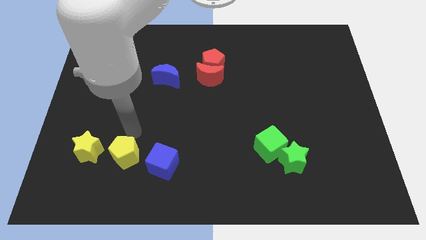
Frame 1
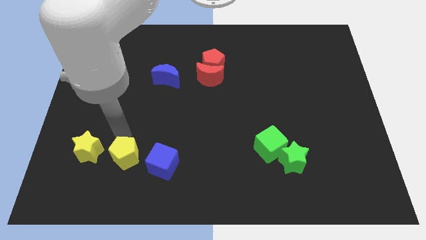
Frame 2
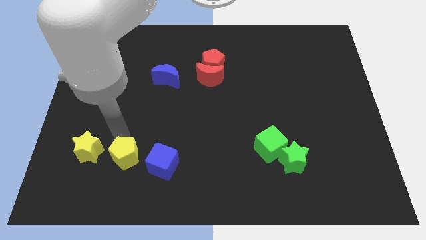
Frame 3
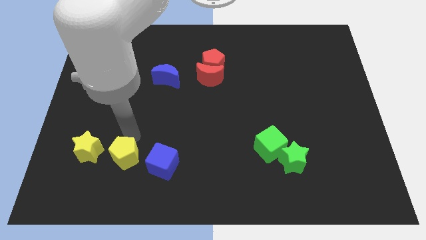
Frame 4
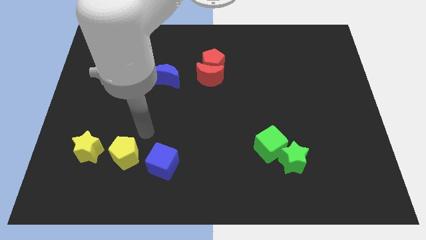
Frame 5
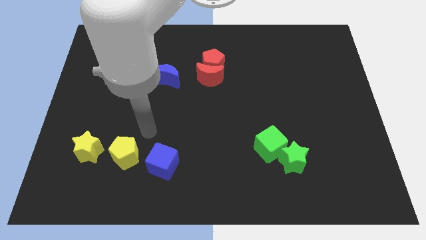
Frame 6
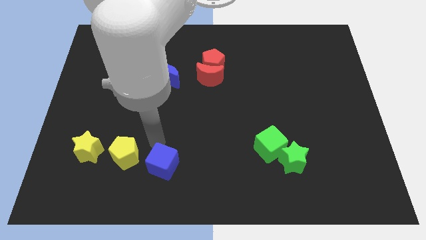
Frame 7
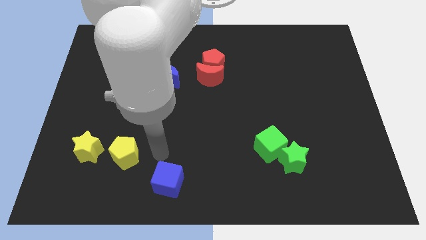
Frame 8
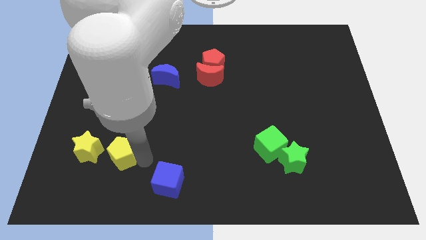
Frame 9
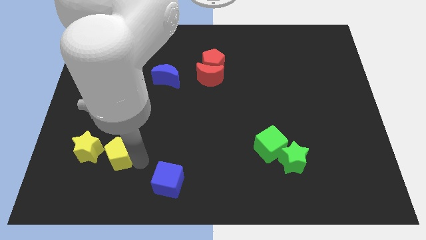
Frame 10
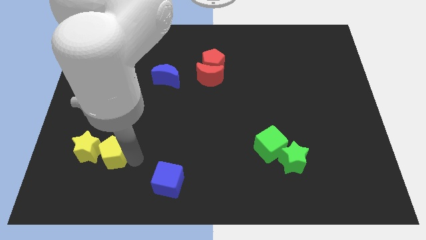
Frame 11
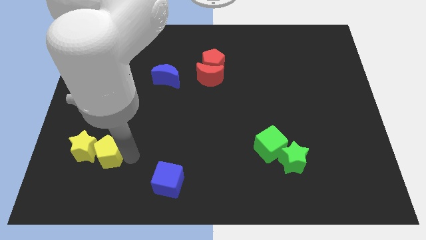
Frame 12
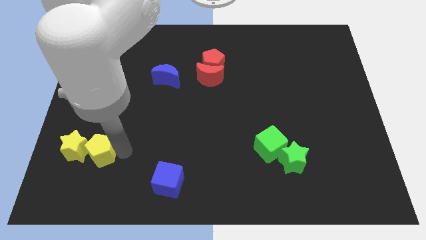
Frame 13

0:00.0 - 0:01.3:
move the yellow pentagon into the yellow star

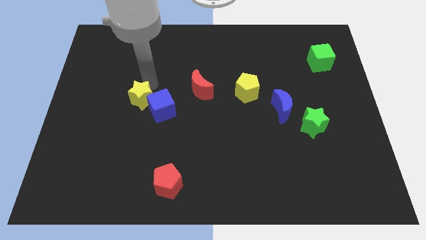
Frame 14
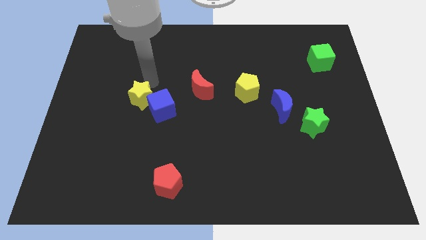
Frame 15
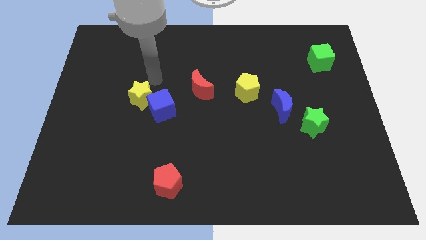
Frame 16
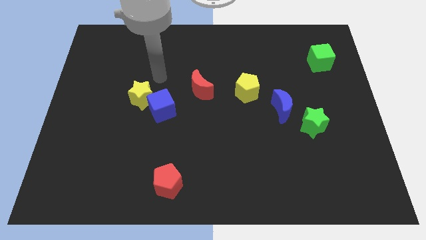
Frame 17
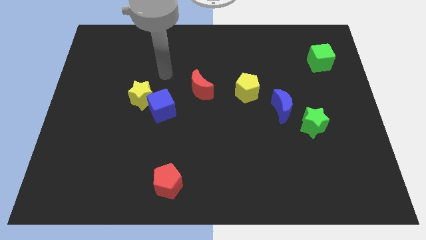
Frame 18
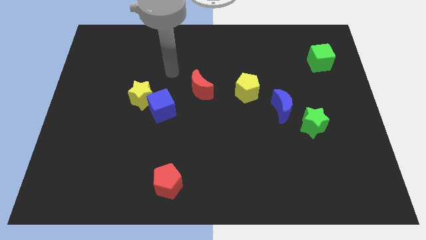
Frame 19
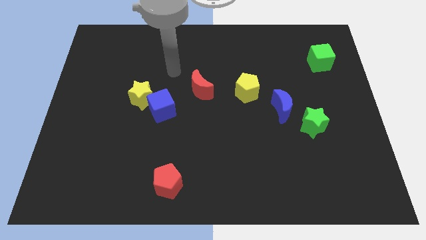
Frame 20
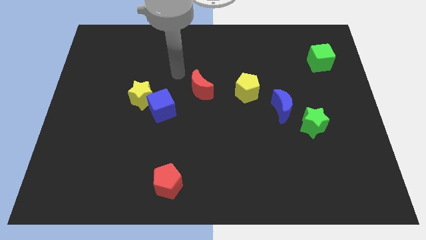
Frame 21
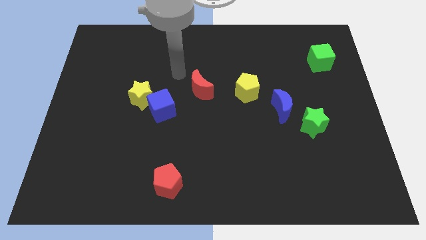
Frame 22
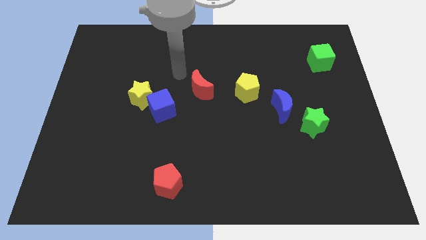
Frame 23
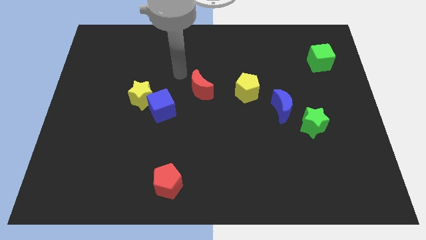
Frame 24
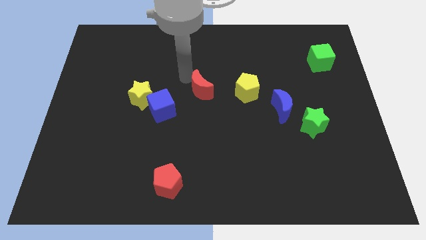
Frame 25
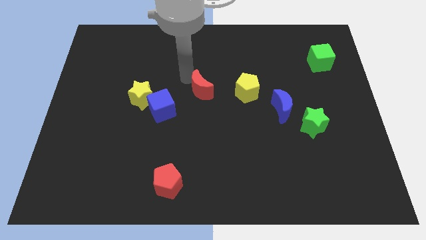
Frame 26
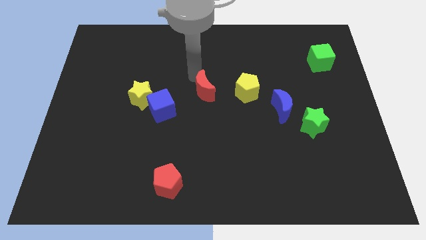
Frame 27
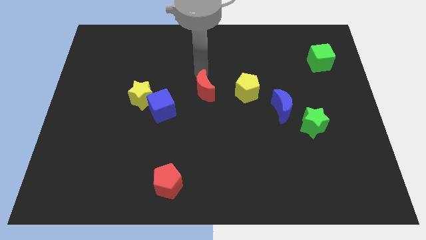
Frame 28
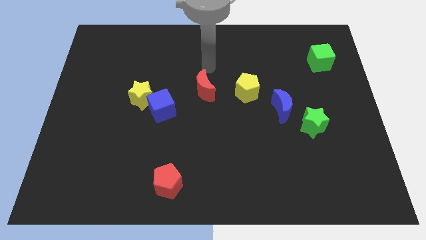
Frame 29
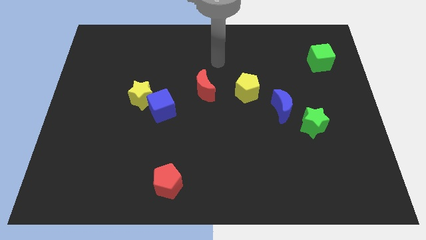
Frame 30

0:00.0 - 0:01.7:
move the arm towards red moon

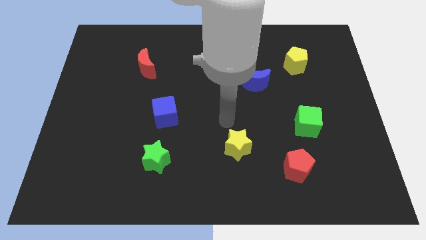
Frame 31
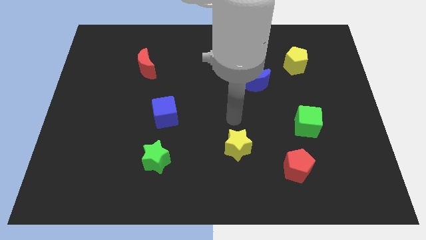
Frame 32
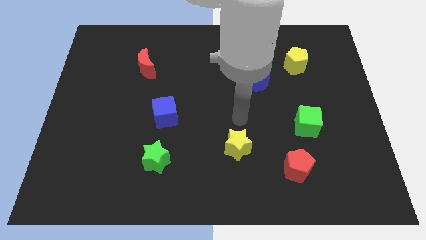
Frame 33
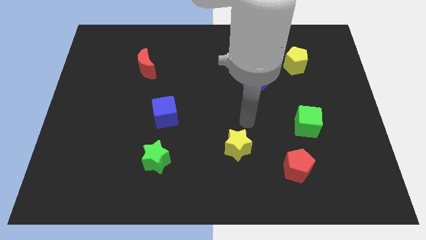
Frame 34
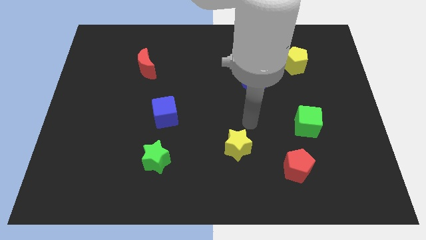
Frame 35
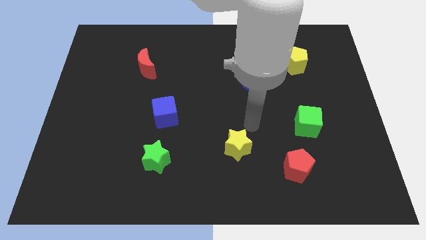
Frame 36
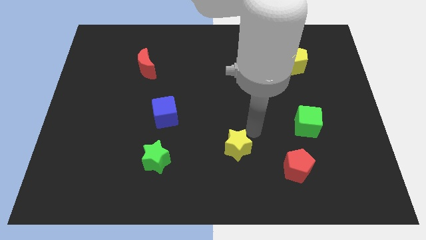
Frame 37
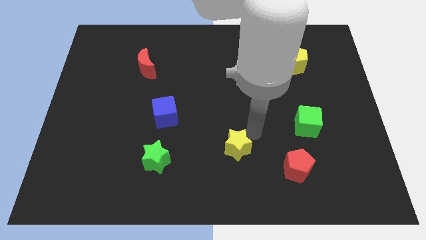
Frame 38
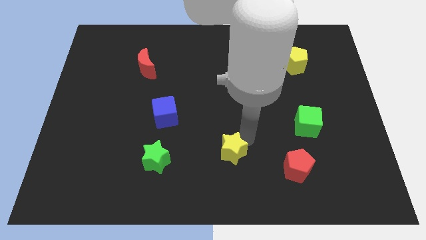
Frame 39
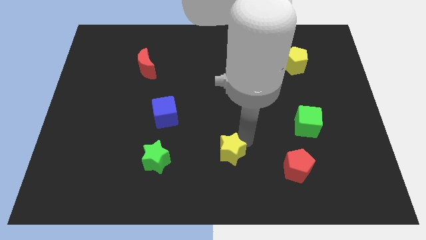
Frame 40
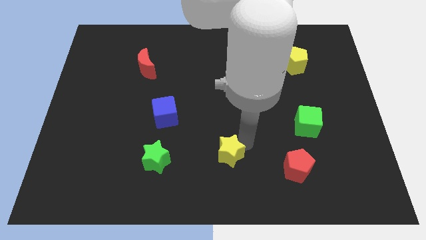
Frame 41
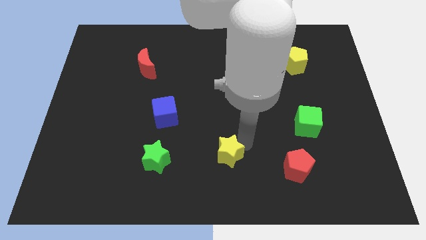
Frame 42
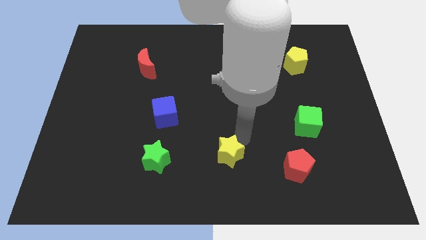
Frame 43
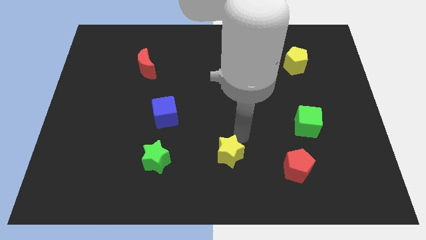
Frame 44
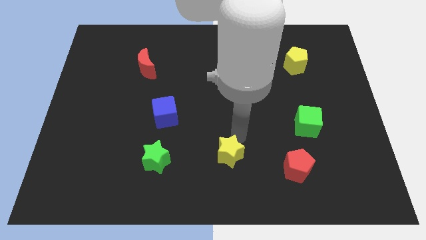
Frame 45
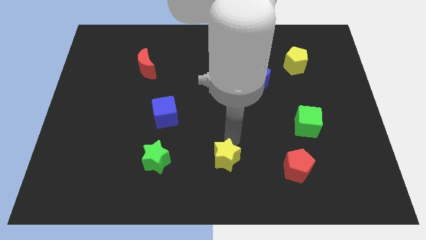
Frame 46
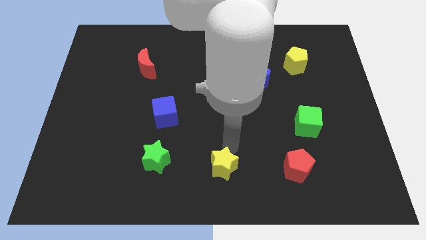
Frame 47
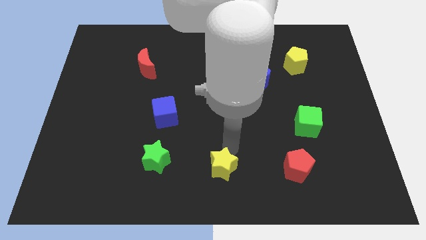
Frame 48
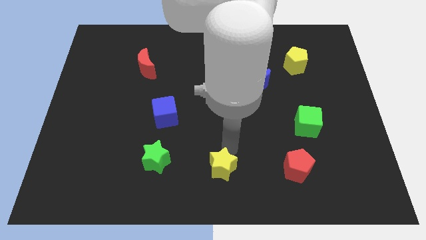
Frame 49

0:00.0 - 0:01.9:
put the yellow star between the green star and red pentagon

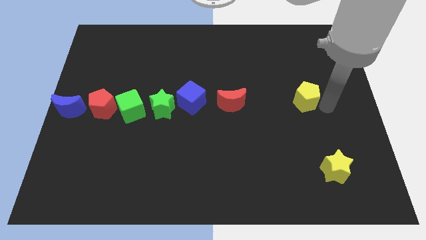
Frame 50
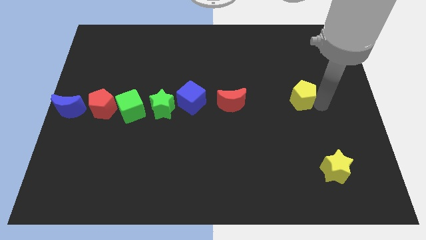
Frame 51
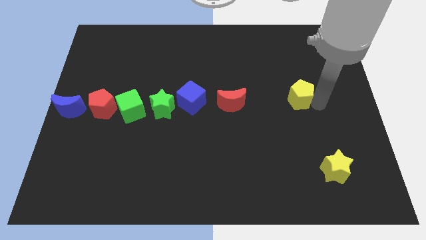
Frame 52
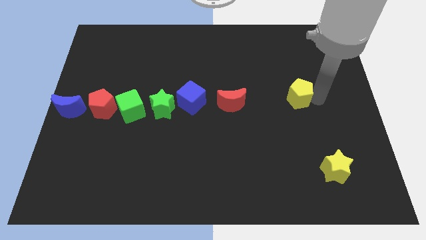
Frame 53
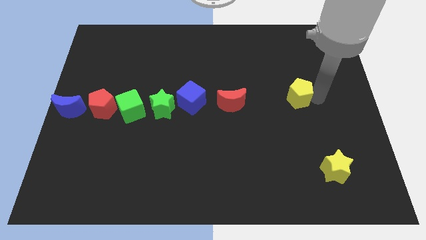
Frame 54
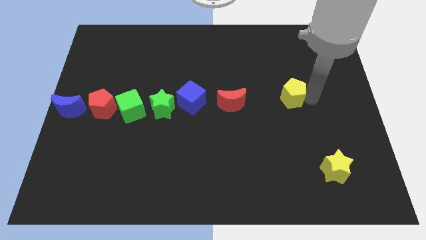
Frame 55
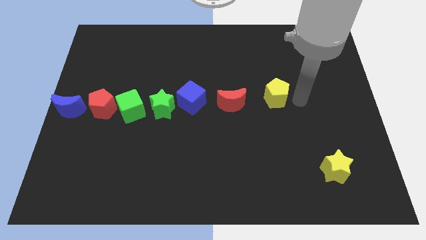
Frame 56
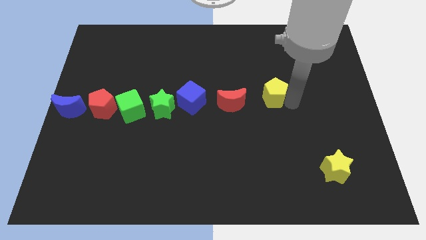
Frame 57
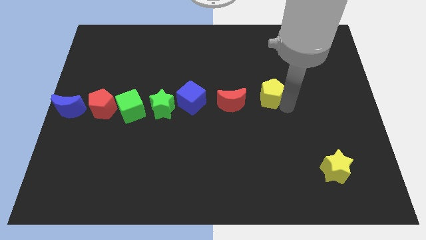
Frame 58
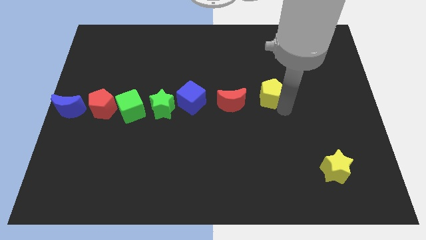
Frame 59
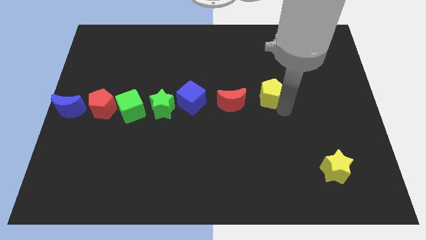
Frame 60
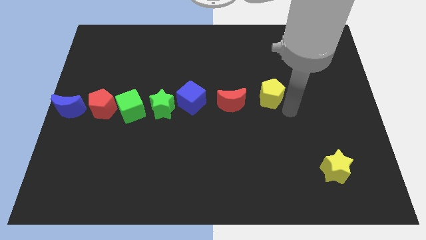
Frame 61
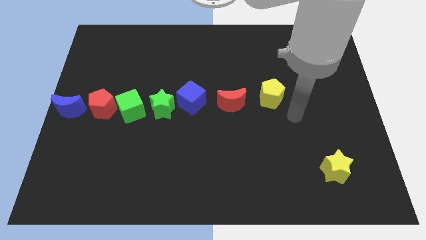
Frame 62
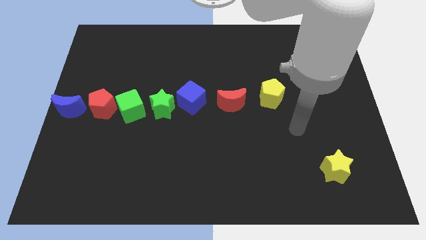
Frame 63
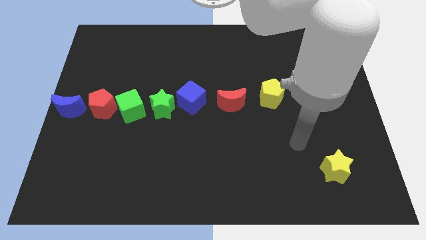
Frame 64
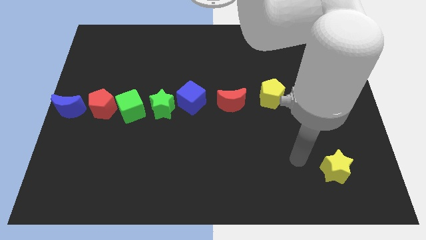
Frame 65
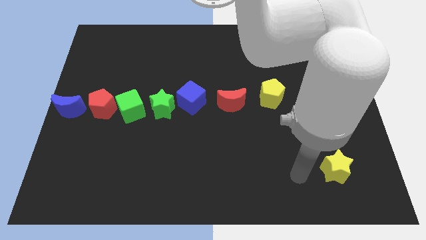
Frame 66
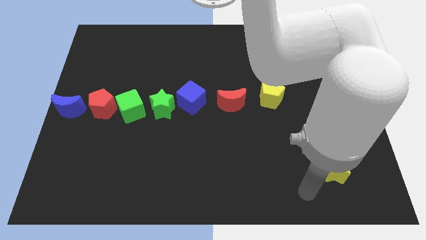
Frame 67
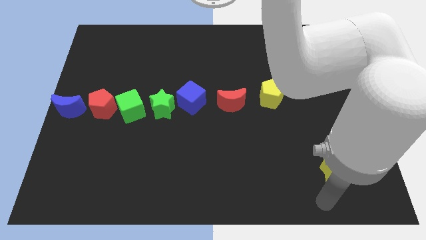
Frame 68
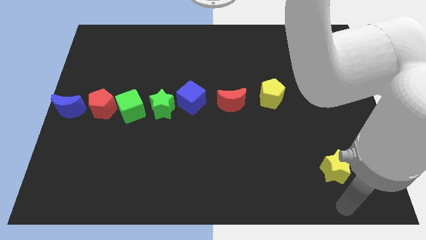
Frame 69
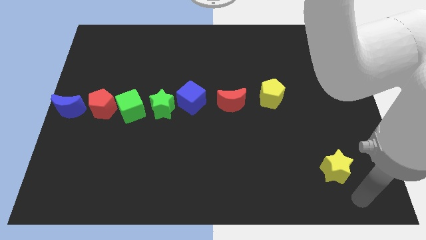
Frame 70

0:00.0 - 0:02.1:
slightly move the yellow pentagon towards left

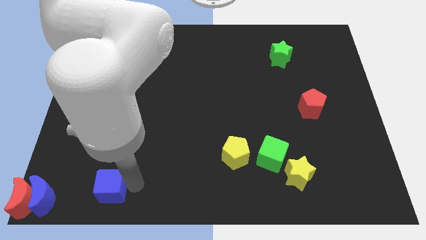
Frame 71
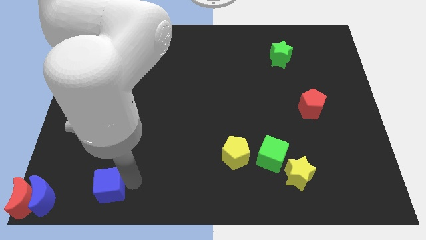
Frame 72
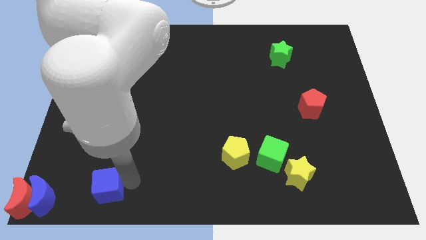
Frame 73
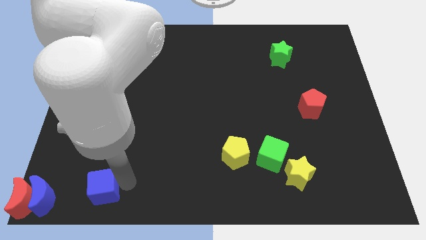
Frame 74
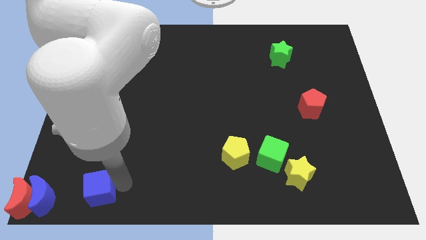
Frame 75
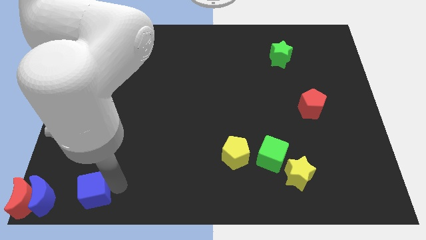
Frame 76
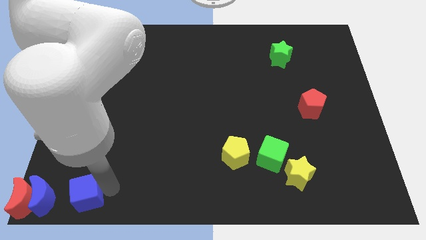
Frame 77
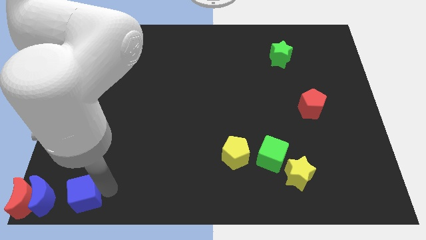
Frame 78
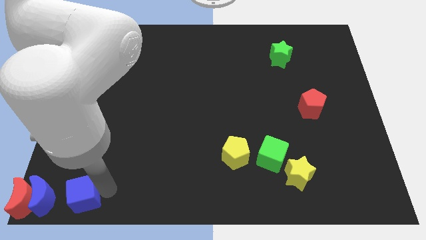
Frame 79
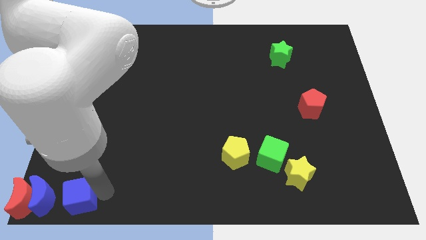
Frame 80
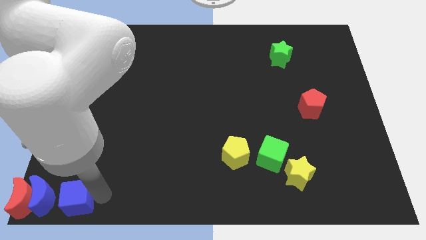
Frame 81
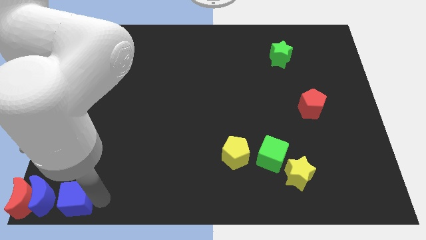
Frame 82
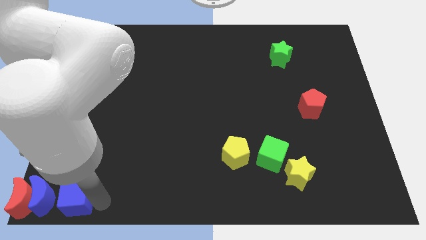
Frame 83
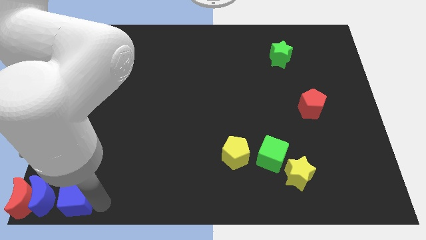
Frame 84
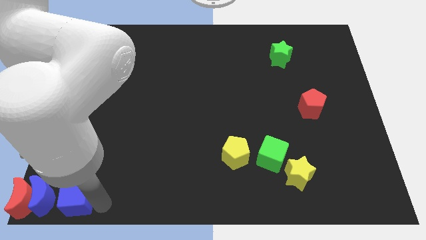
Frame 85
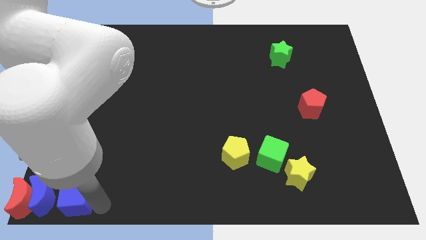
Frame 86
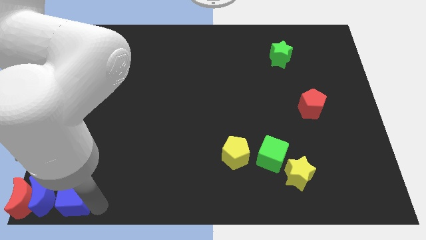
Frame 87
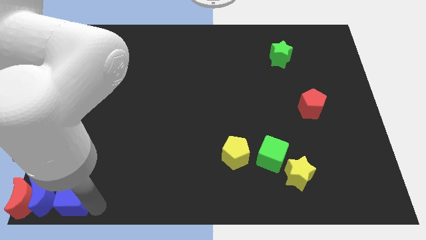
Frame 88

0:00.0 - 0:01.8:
add the blue cube to the horizontal line of blocks which are at the bottom left side

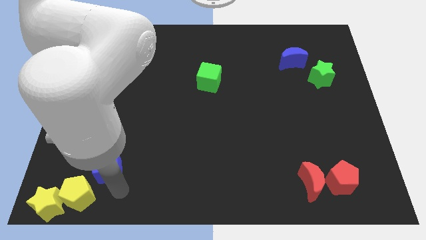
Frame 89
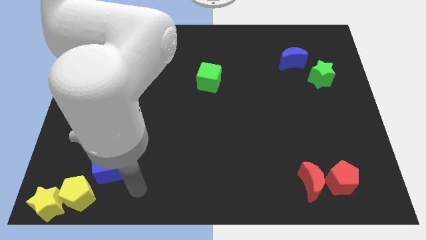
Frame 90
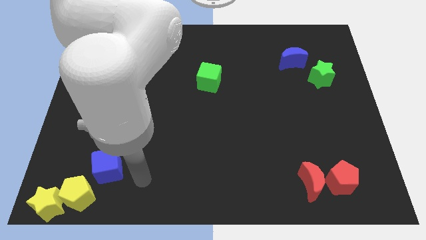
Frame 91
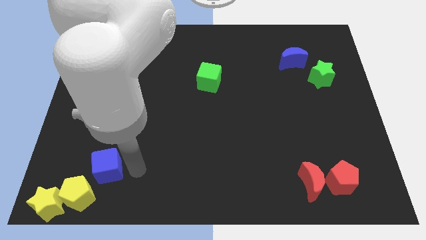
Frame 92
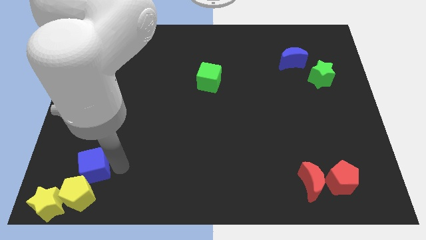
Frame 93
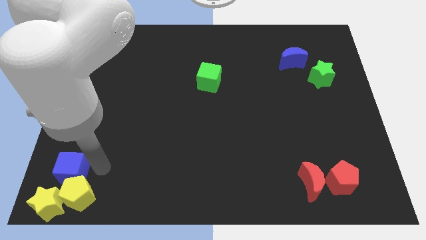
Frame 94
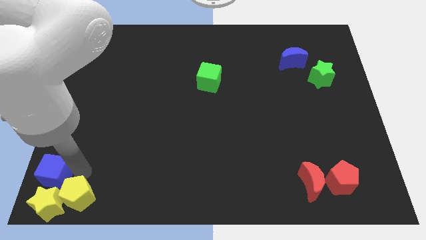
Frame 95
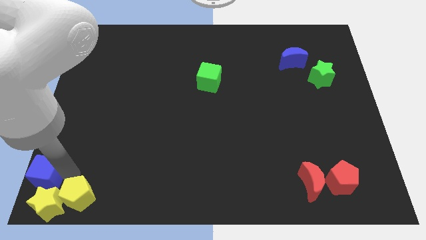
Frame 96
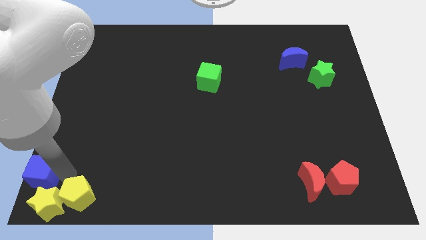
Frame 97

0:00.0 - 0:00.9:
move blue cube above yellow star
